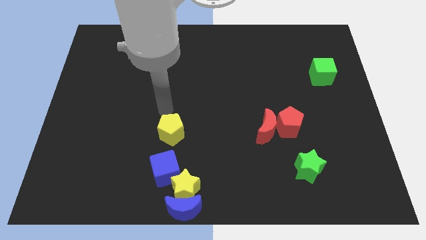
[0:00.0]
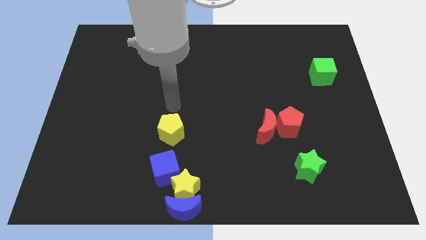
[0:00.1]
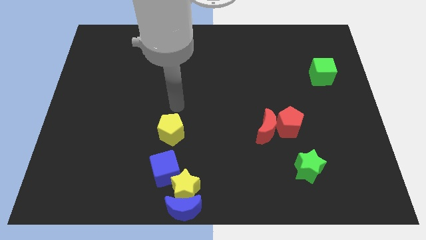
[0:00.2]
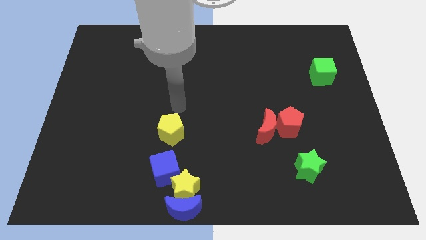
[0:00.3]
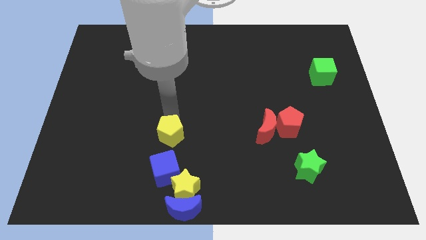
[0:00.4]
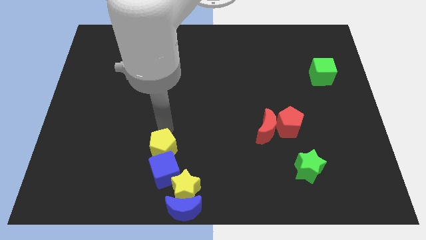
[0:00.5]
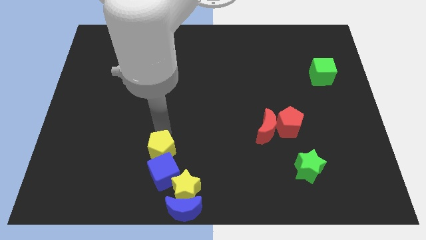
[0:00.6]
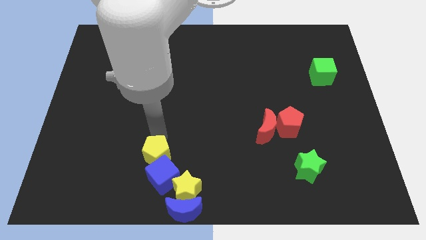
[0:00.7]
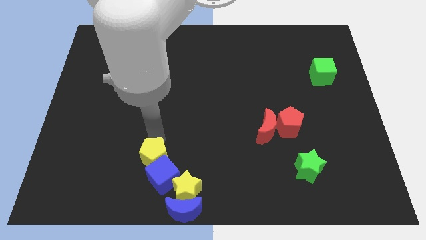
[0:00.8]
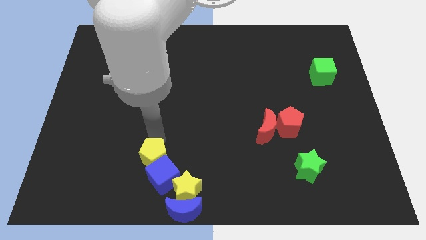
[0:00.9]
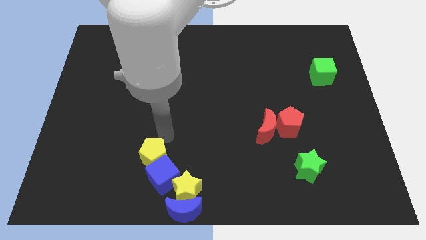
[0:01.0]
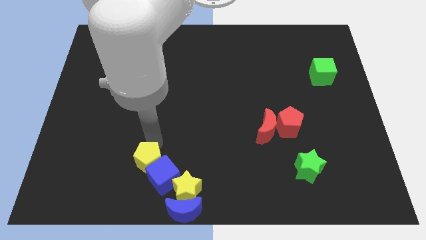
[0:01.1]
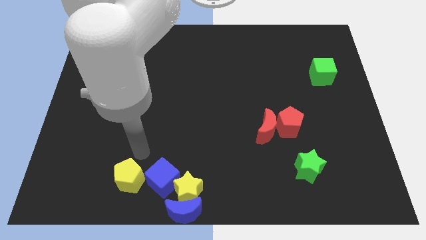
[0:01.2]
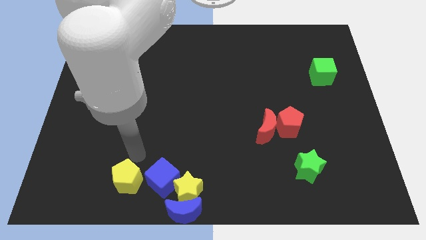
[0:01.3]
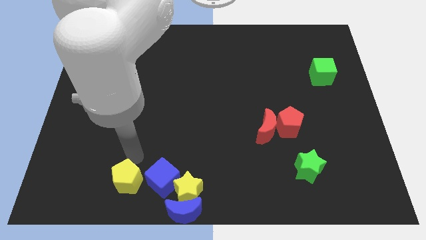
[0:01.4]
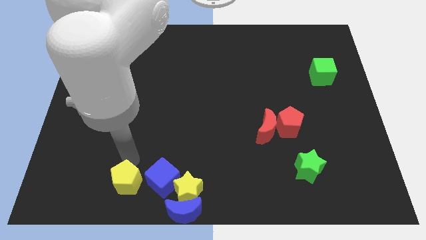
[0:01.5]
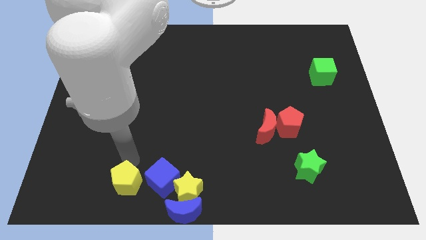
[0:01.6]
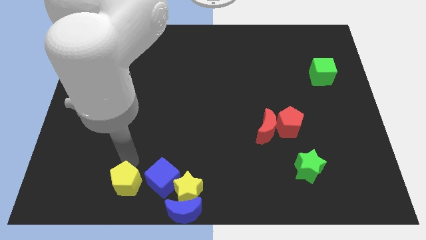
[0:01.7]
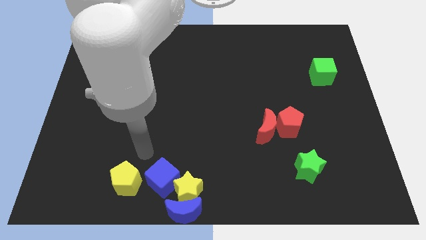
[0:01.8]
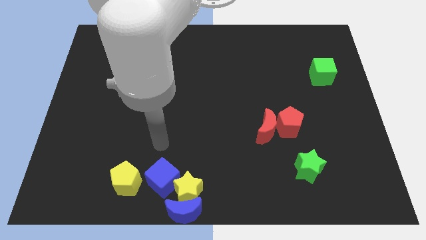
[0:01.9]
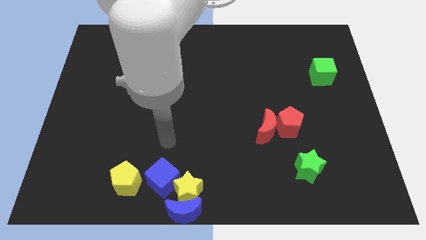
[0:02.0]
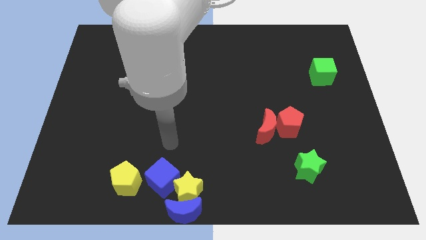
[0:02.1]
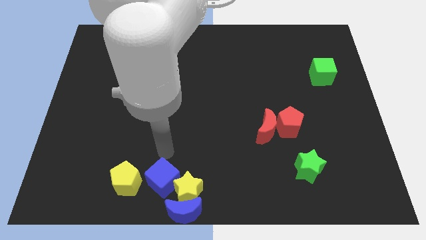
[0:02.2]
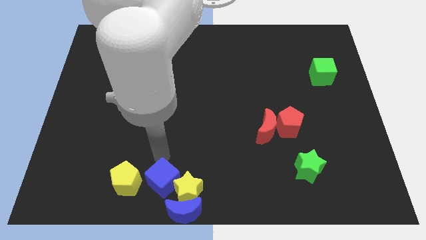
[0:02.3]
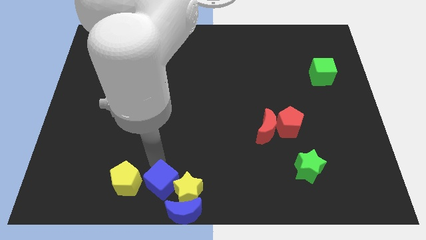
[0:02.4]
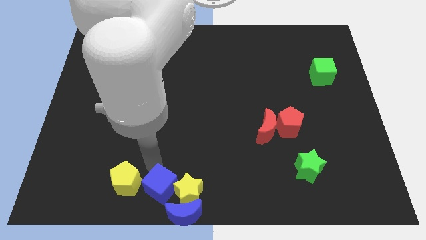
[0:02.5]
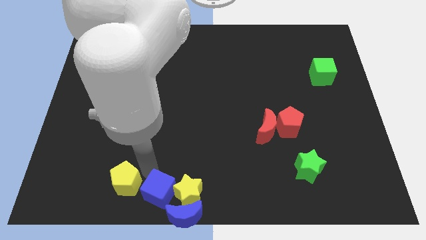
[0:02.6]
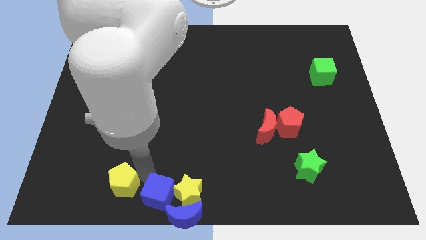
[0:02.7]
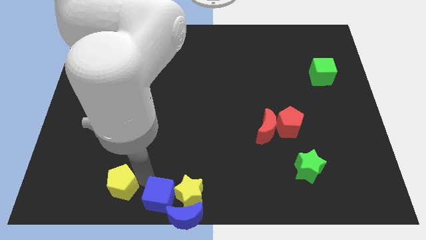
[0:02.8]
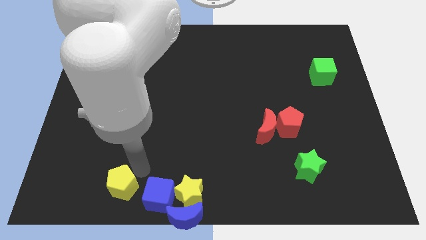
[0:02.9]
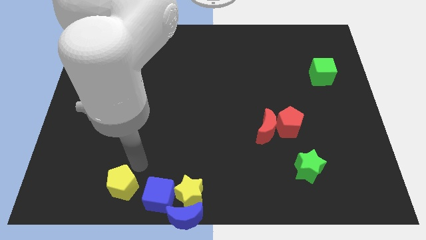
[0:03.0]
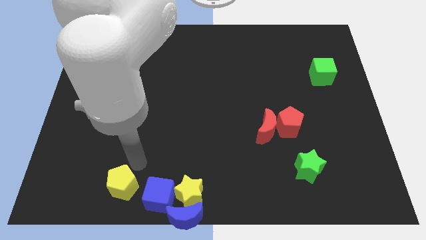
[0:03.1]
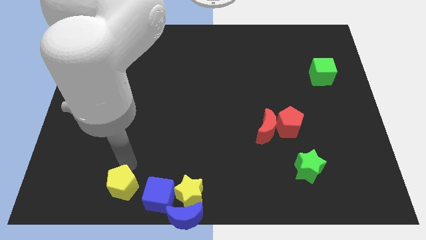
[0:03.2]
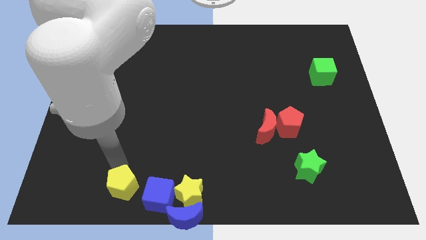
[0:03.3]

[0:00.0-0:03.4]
place the blue blocks and yellow blocks at the bottom of the board

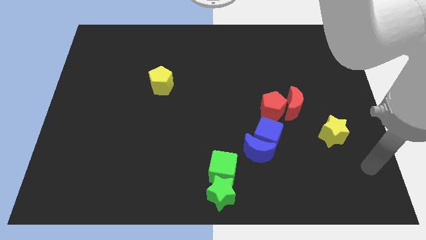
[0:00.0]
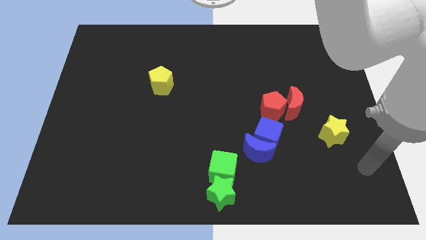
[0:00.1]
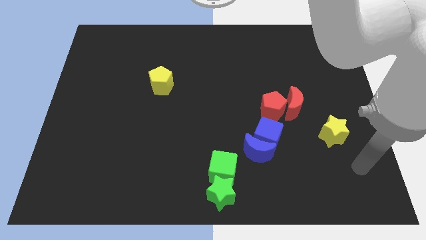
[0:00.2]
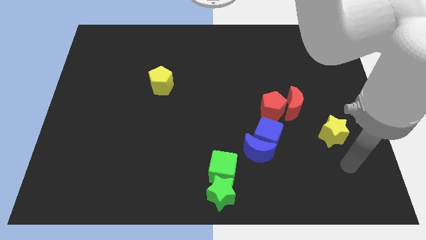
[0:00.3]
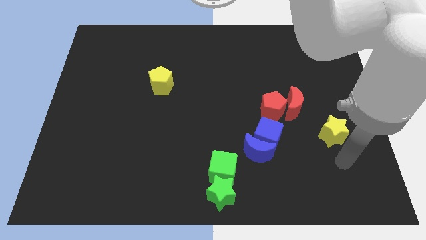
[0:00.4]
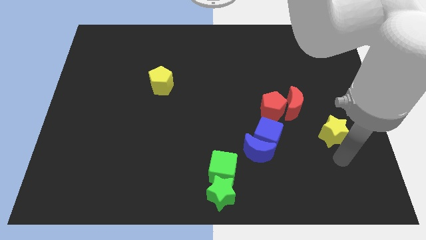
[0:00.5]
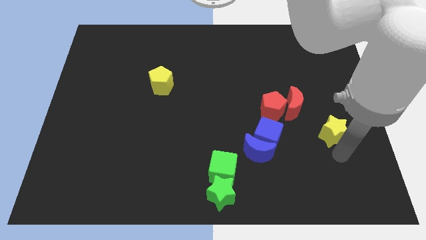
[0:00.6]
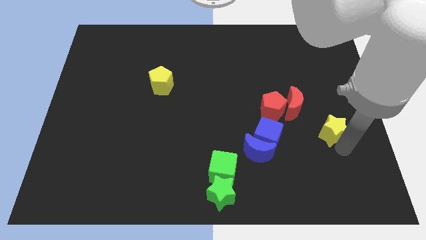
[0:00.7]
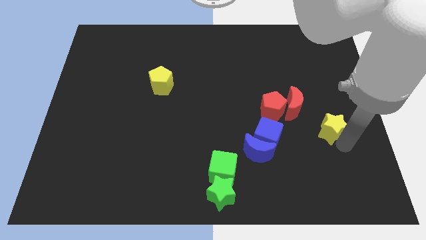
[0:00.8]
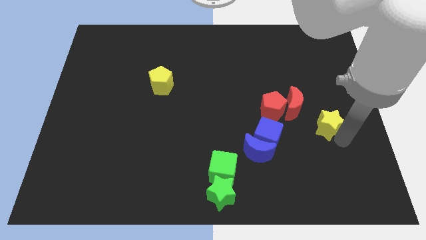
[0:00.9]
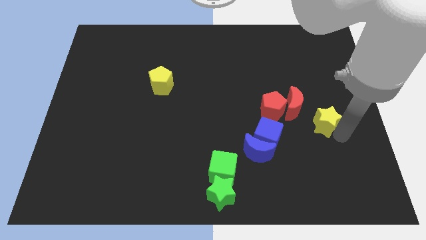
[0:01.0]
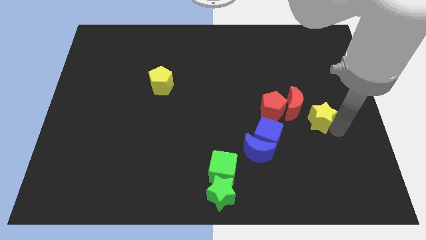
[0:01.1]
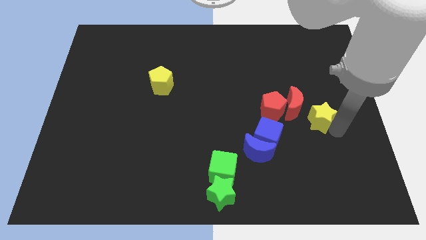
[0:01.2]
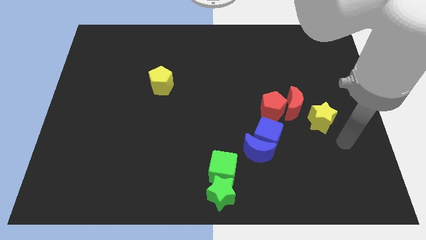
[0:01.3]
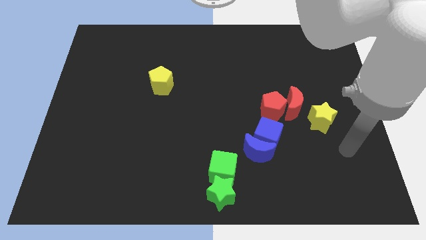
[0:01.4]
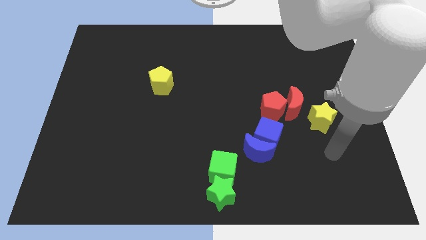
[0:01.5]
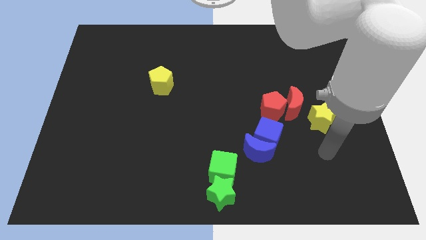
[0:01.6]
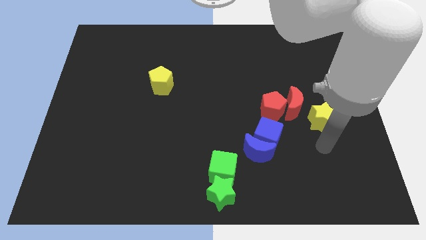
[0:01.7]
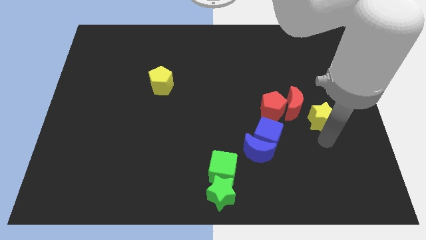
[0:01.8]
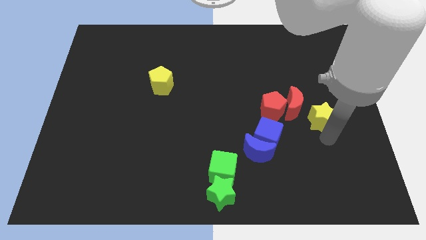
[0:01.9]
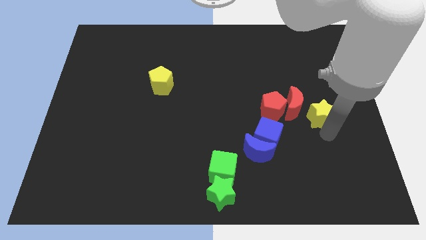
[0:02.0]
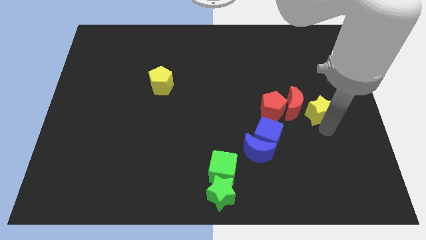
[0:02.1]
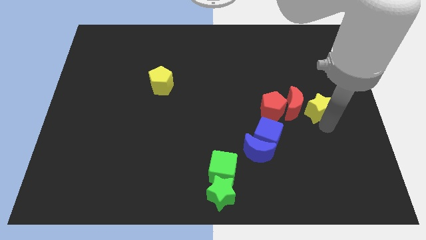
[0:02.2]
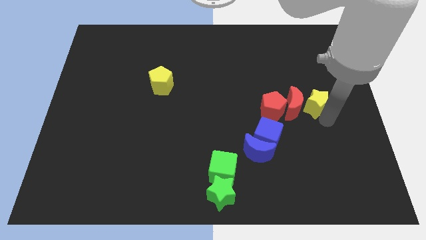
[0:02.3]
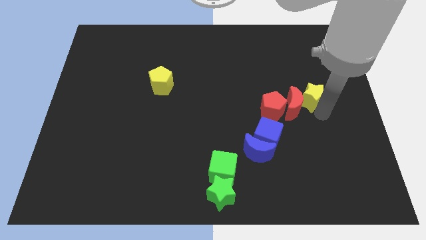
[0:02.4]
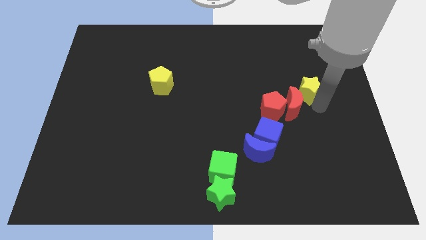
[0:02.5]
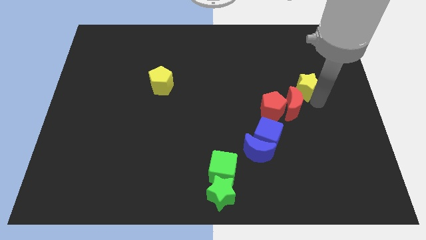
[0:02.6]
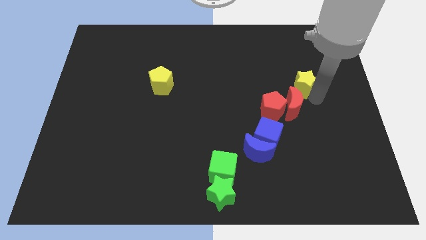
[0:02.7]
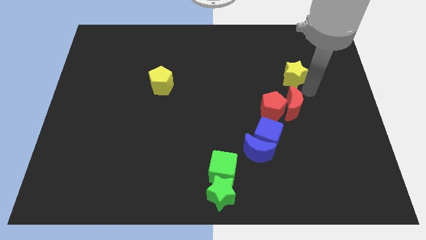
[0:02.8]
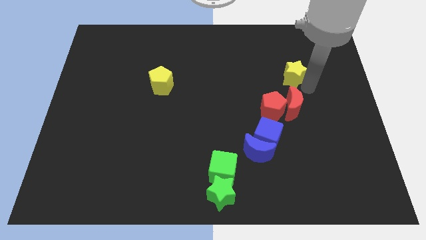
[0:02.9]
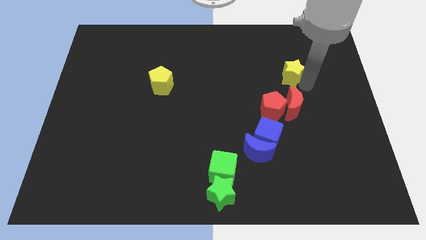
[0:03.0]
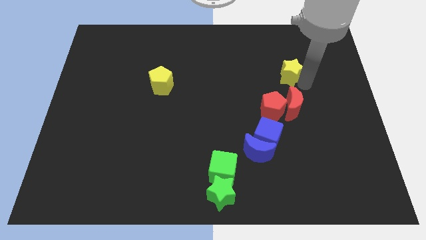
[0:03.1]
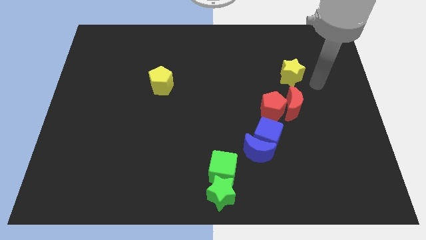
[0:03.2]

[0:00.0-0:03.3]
place yellow start above red crescent

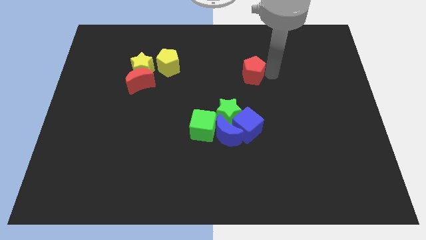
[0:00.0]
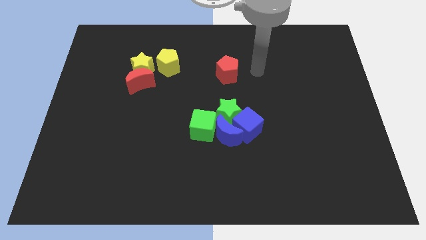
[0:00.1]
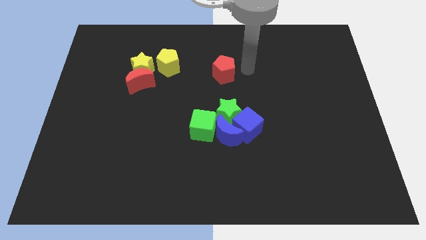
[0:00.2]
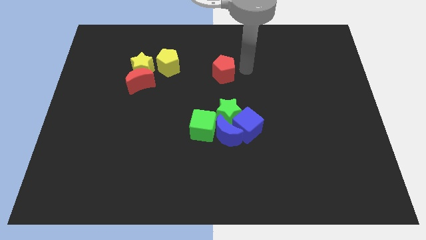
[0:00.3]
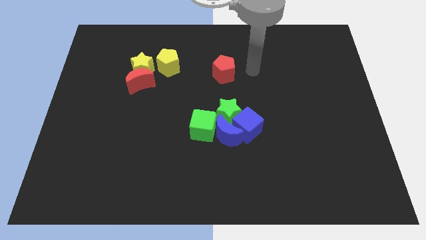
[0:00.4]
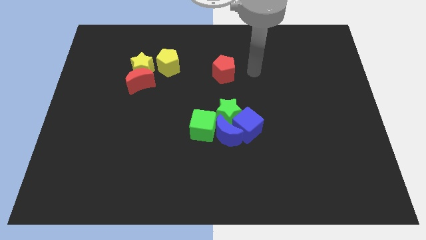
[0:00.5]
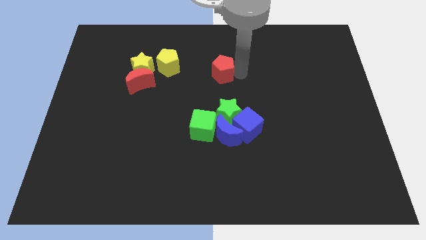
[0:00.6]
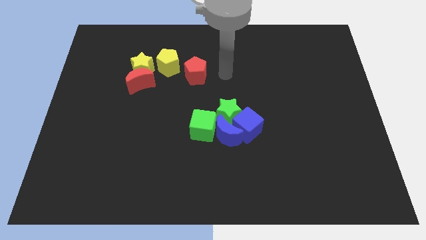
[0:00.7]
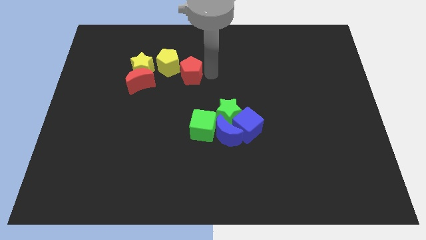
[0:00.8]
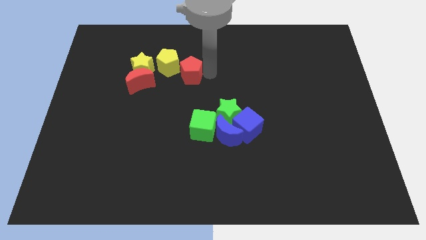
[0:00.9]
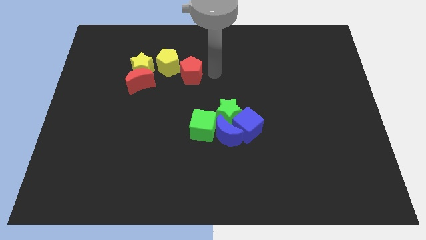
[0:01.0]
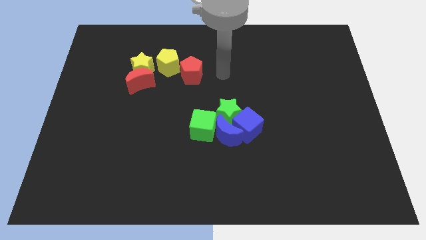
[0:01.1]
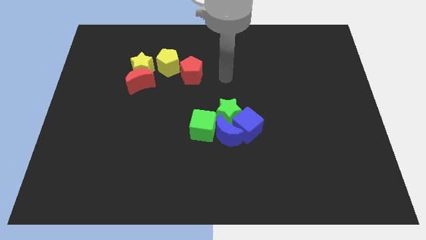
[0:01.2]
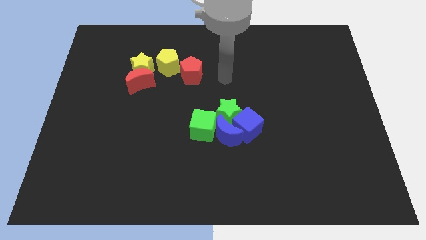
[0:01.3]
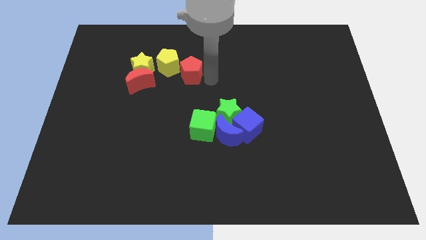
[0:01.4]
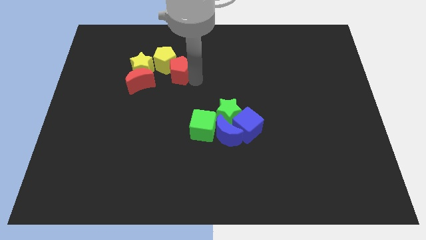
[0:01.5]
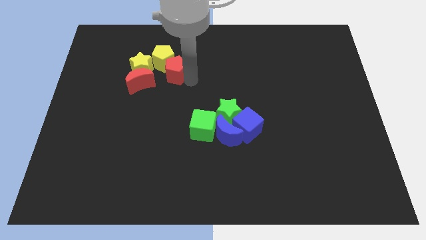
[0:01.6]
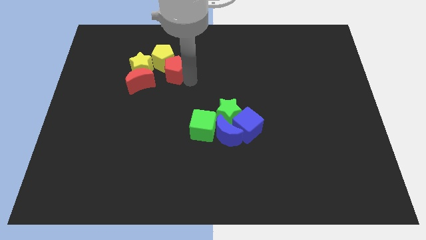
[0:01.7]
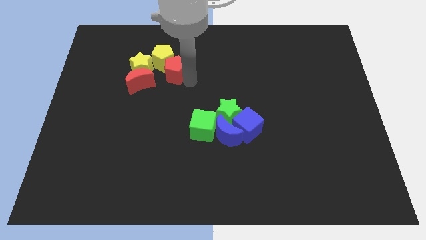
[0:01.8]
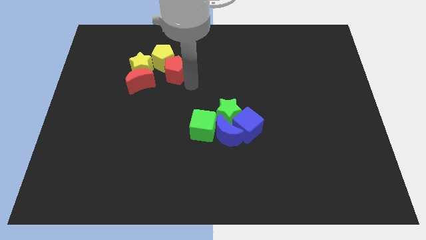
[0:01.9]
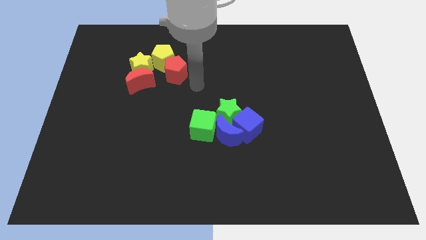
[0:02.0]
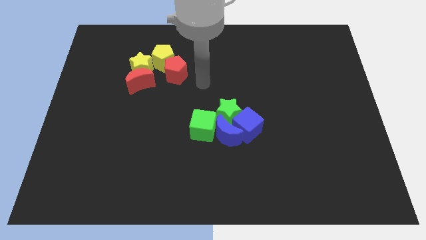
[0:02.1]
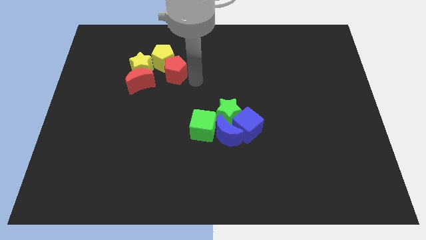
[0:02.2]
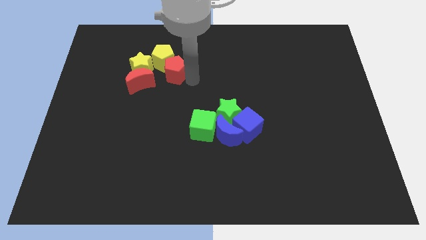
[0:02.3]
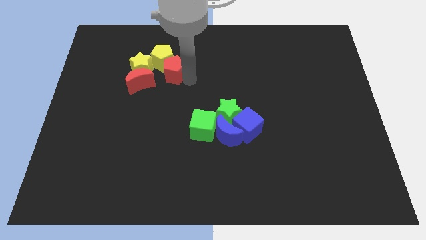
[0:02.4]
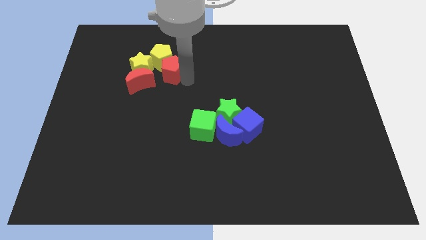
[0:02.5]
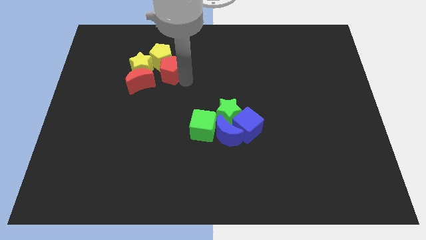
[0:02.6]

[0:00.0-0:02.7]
push the red pentagon into the yellow pentagon
